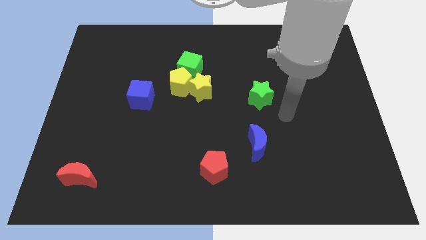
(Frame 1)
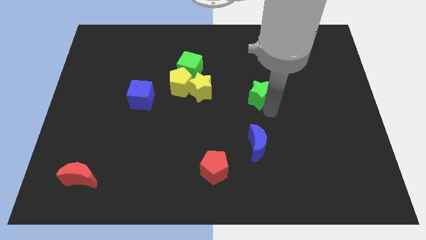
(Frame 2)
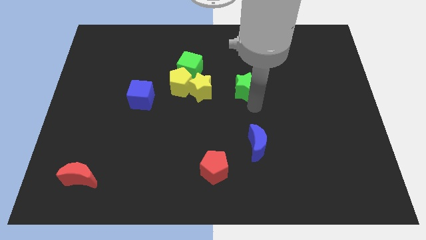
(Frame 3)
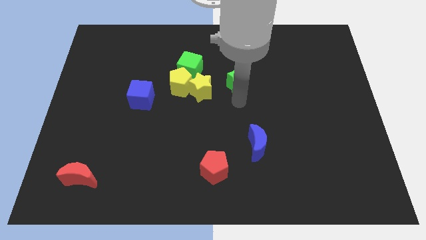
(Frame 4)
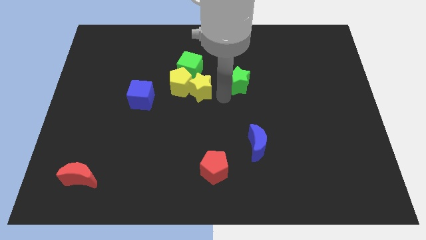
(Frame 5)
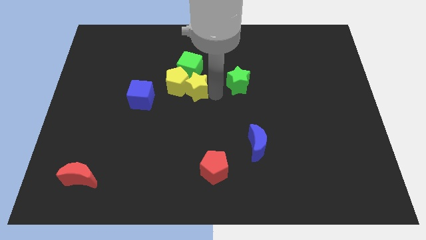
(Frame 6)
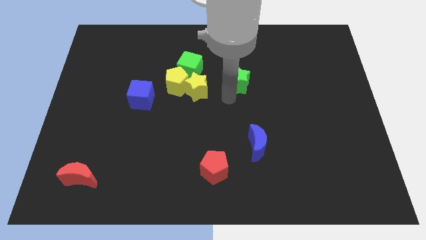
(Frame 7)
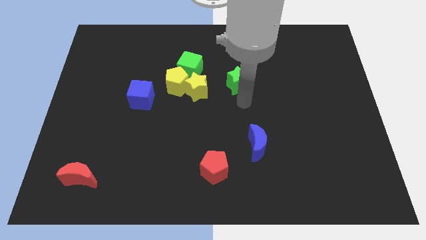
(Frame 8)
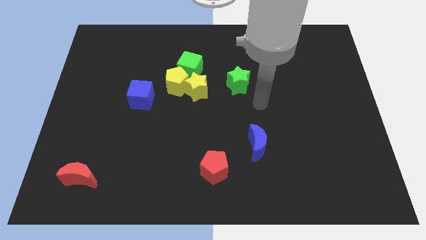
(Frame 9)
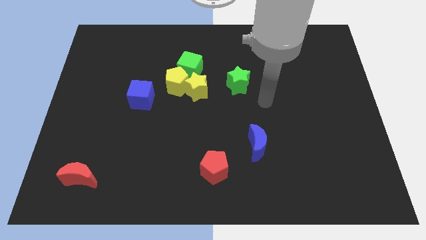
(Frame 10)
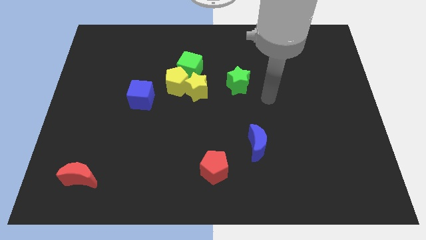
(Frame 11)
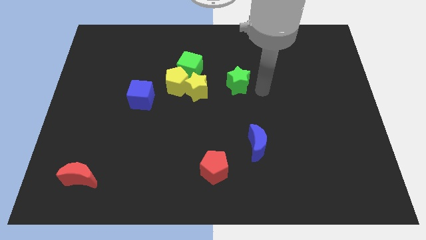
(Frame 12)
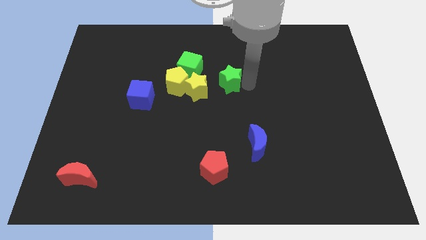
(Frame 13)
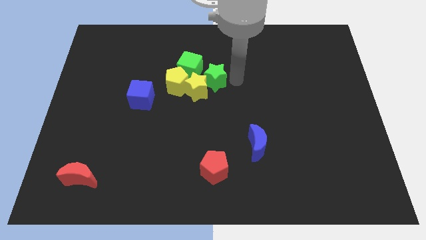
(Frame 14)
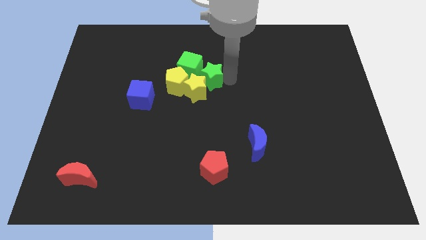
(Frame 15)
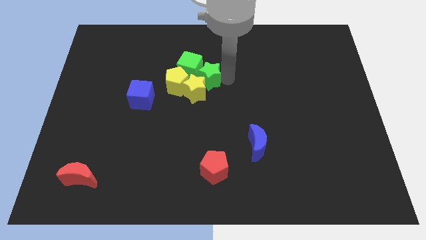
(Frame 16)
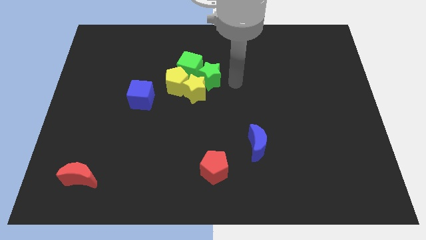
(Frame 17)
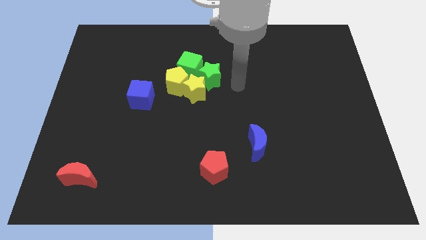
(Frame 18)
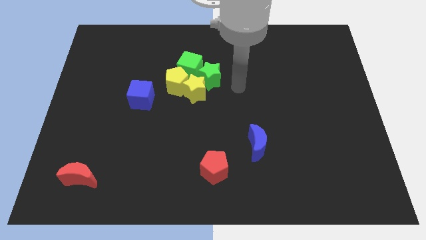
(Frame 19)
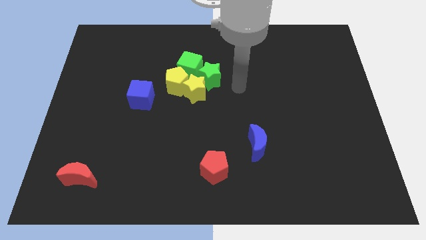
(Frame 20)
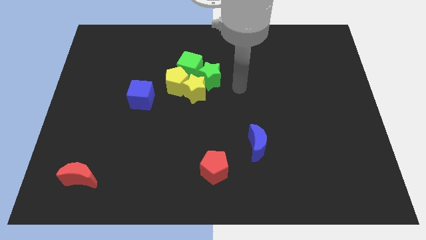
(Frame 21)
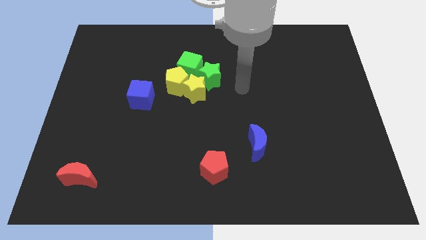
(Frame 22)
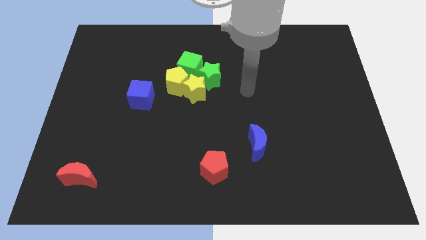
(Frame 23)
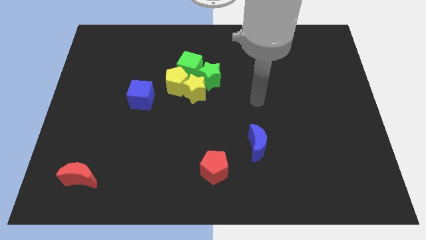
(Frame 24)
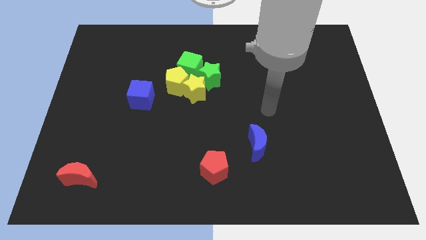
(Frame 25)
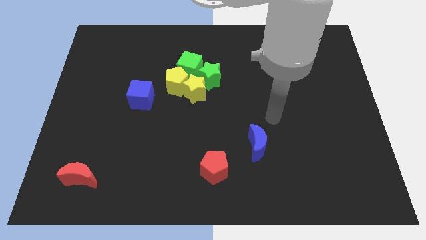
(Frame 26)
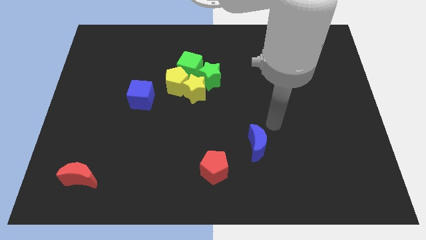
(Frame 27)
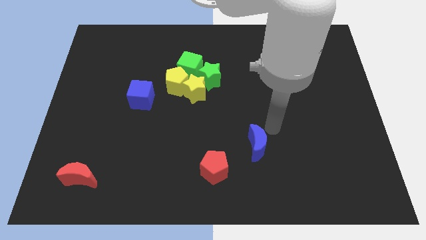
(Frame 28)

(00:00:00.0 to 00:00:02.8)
push green star in to green cube

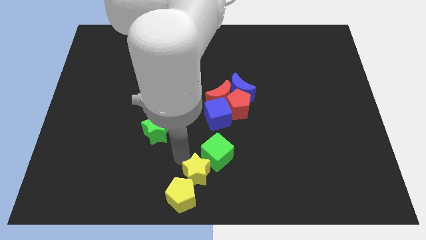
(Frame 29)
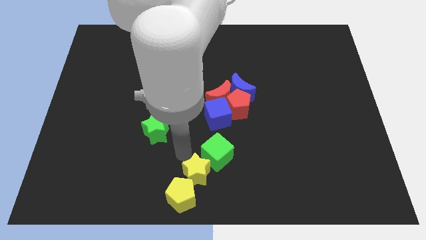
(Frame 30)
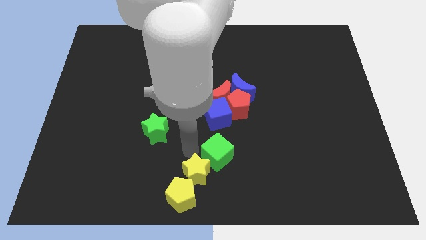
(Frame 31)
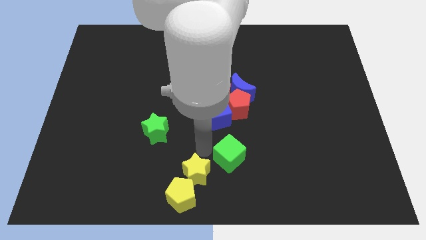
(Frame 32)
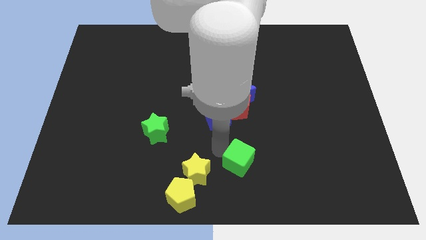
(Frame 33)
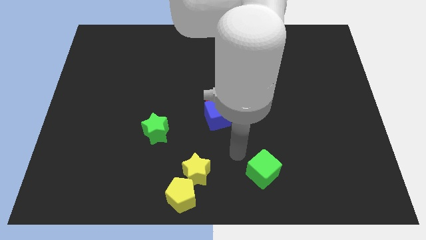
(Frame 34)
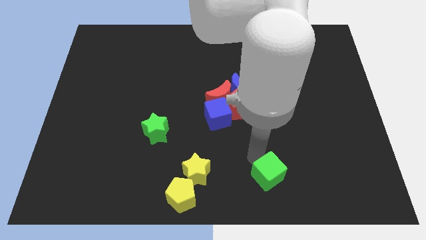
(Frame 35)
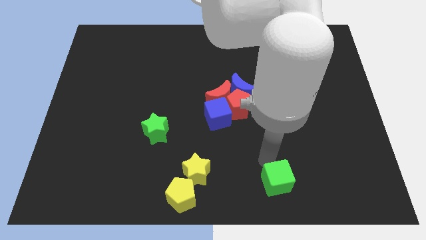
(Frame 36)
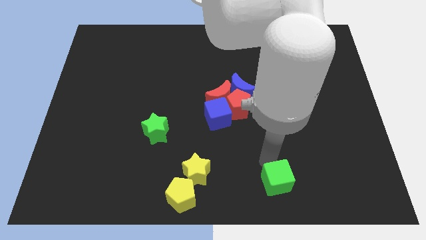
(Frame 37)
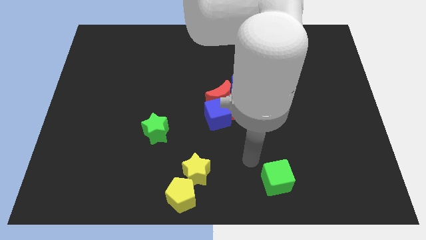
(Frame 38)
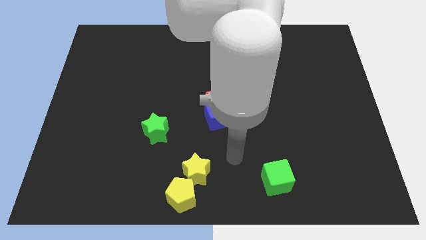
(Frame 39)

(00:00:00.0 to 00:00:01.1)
push the green cube away from the group of yellow blocks

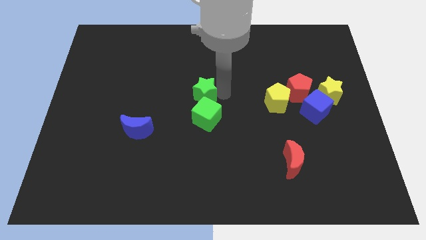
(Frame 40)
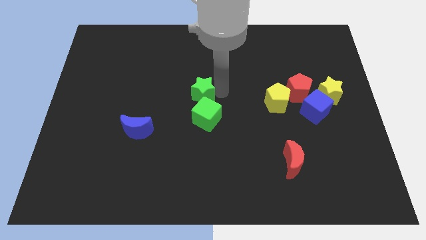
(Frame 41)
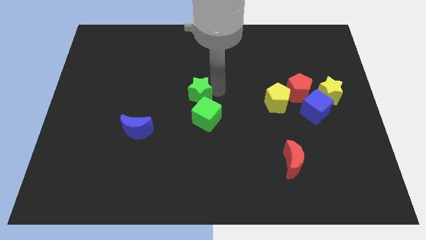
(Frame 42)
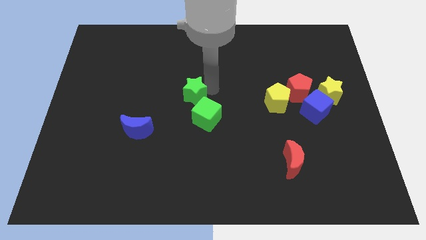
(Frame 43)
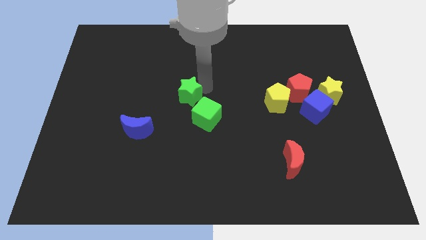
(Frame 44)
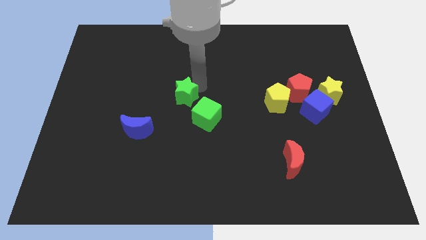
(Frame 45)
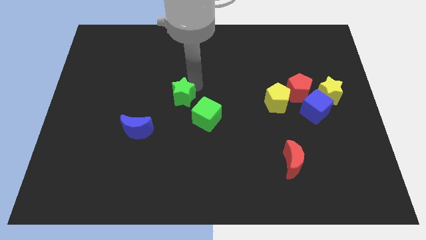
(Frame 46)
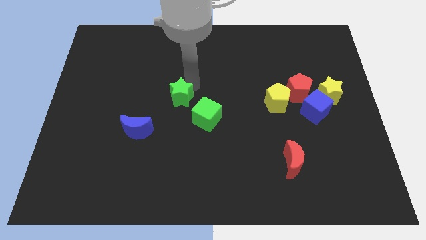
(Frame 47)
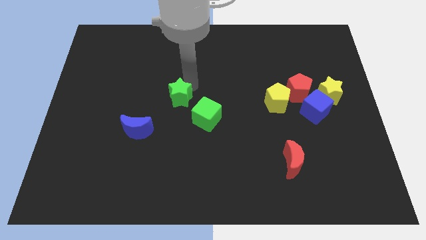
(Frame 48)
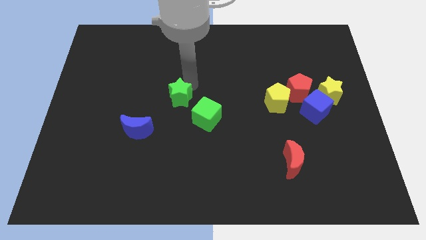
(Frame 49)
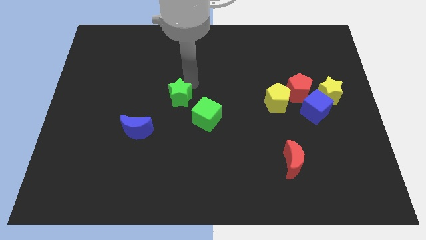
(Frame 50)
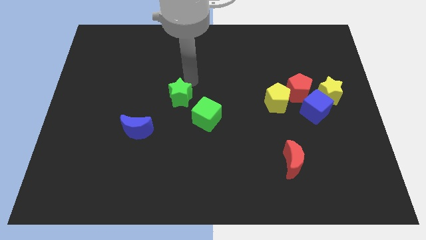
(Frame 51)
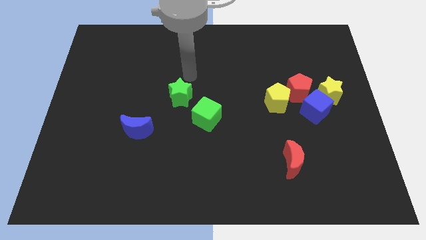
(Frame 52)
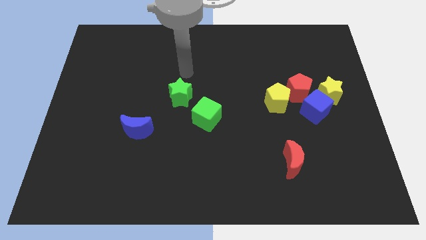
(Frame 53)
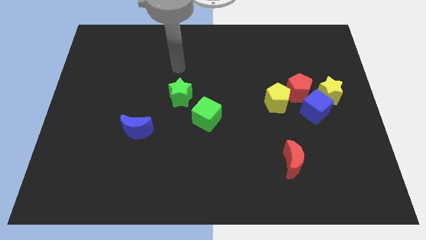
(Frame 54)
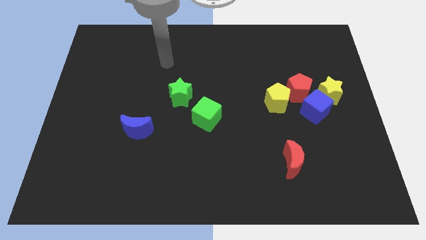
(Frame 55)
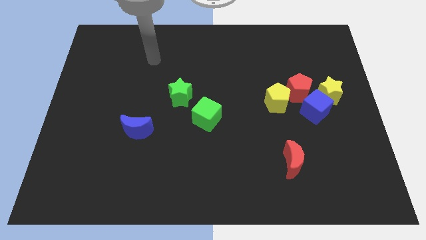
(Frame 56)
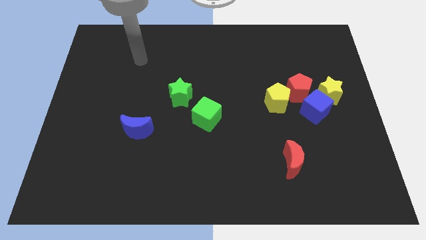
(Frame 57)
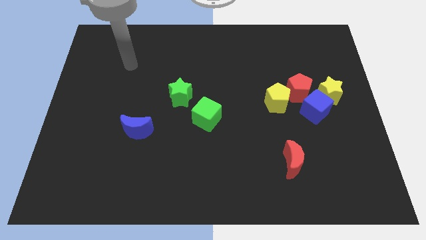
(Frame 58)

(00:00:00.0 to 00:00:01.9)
slide the green star to the top left side of the green cube

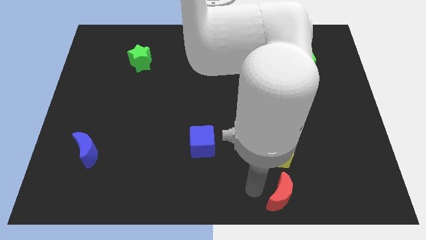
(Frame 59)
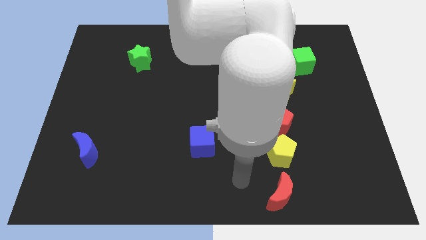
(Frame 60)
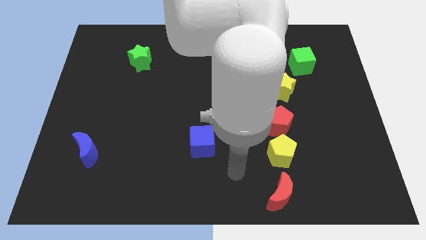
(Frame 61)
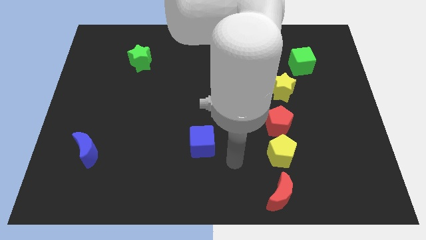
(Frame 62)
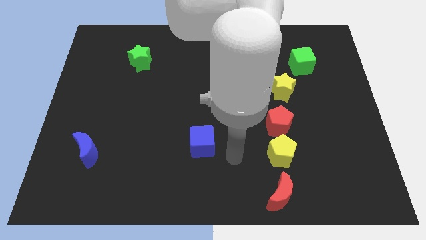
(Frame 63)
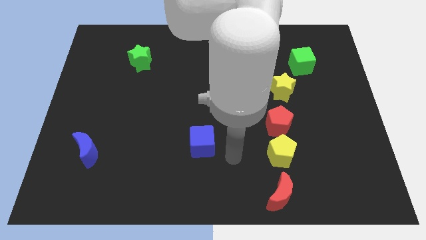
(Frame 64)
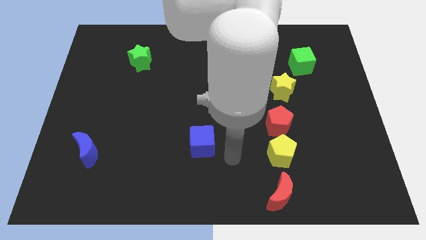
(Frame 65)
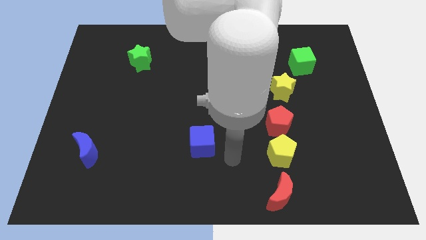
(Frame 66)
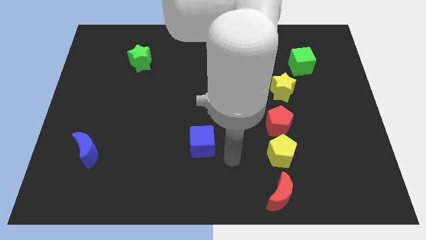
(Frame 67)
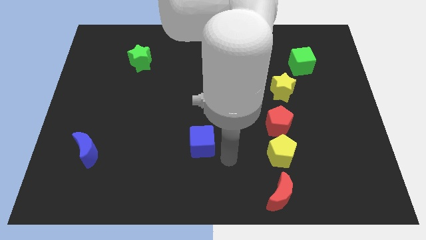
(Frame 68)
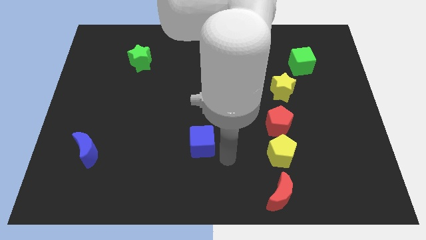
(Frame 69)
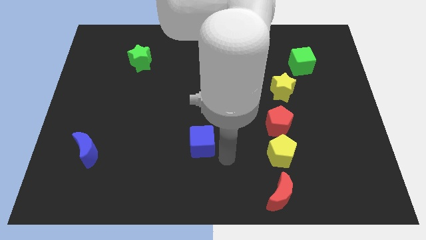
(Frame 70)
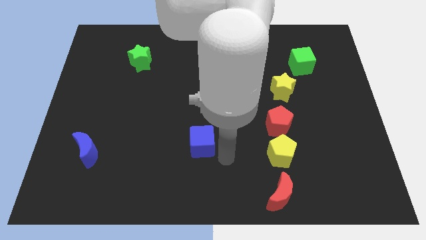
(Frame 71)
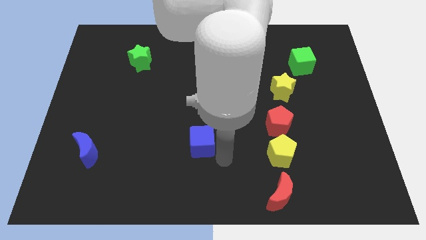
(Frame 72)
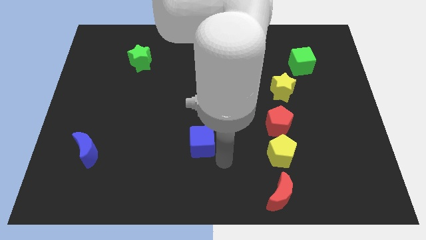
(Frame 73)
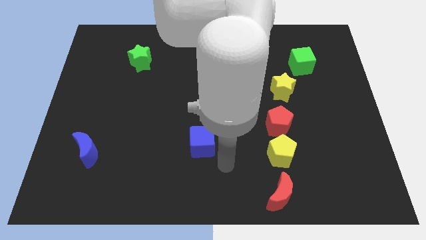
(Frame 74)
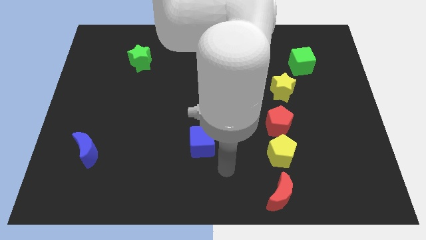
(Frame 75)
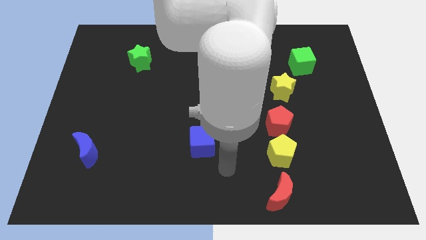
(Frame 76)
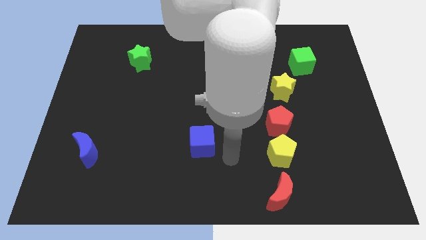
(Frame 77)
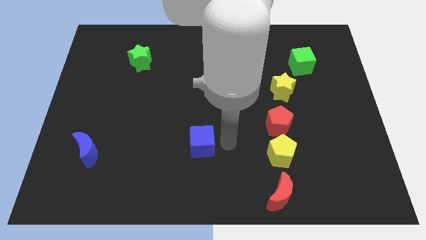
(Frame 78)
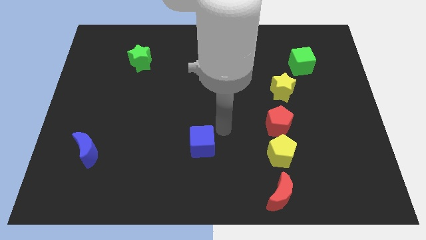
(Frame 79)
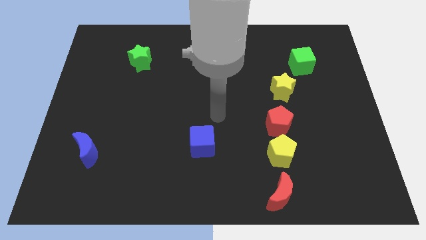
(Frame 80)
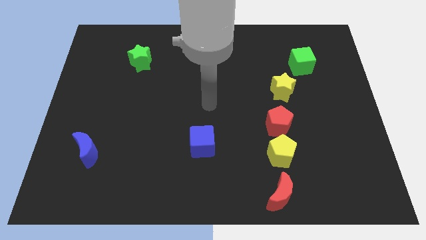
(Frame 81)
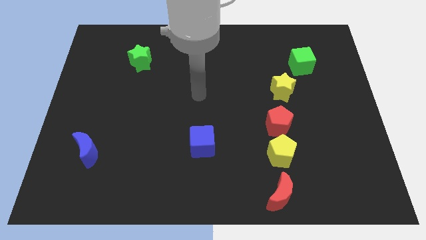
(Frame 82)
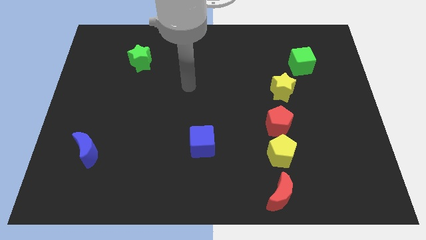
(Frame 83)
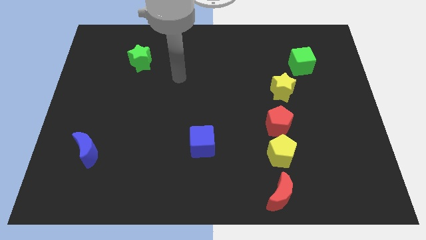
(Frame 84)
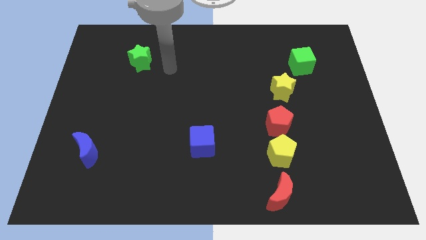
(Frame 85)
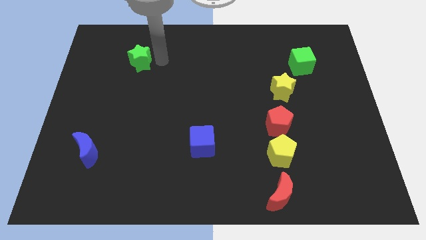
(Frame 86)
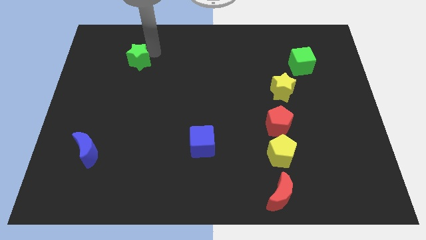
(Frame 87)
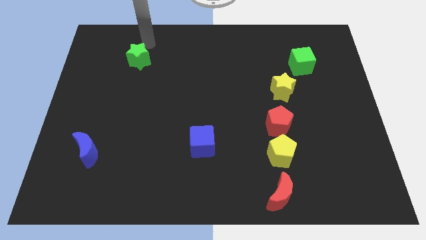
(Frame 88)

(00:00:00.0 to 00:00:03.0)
tap the green star
